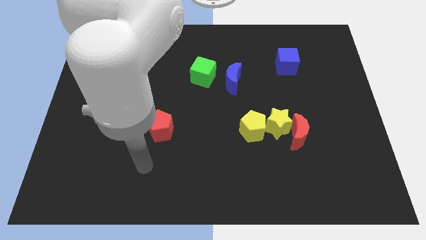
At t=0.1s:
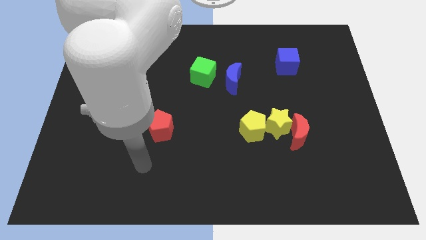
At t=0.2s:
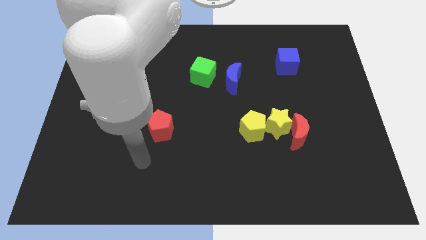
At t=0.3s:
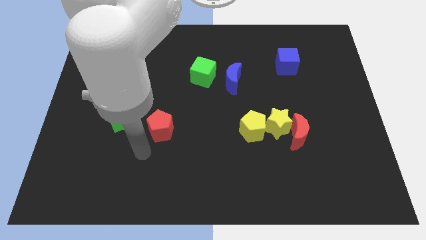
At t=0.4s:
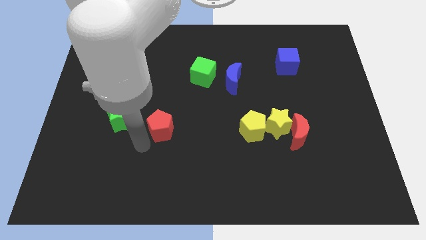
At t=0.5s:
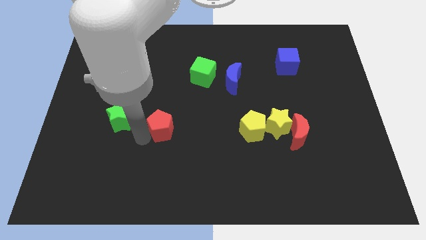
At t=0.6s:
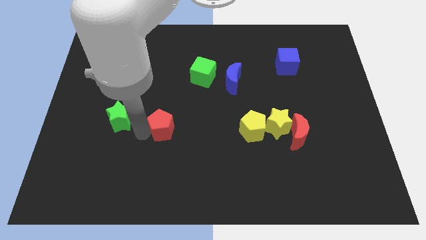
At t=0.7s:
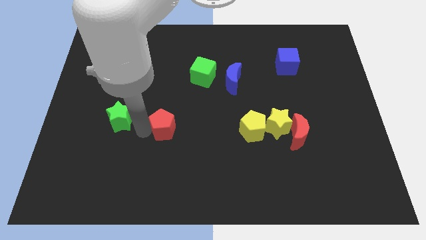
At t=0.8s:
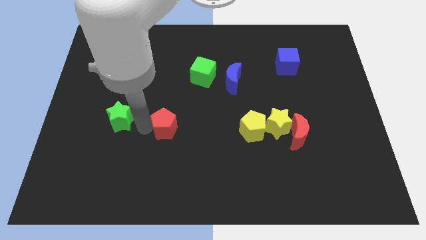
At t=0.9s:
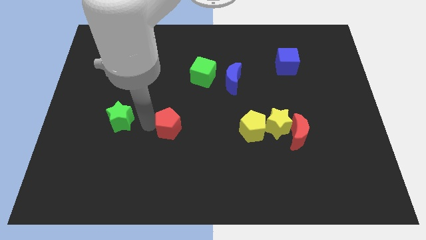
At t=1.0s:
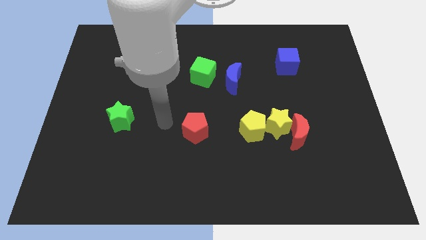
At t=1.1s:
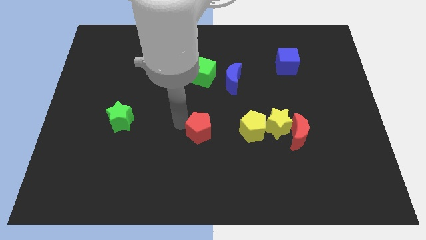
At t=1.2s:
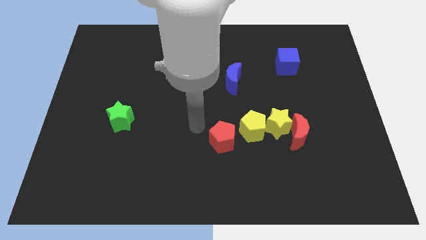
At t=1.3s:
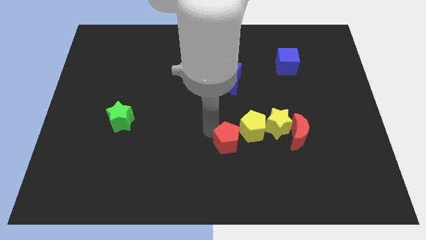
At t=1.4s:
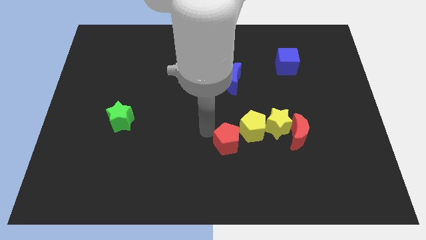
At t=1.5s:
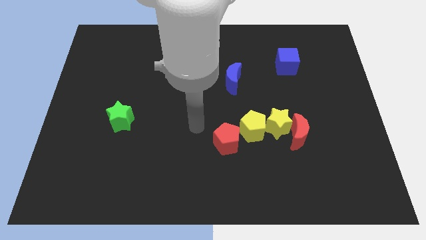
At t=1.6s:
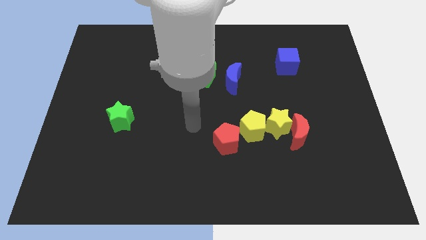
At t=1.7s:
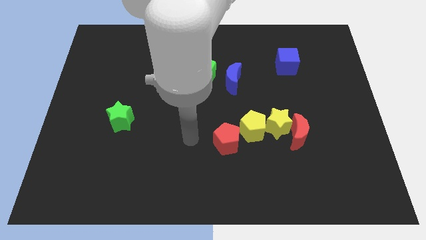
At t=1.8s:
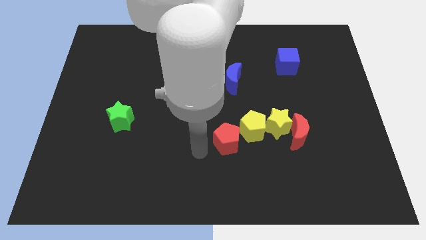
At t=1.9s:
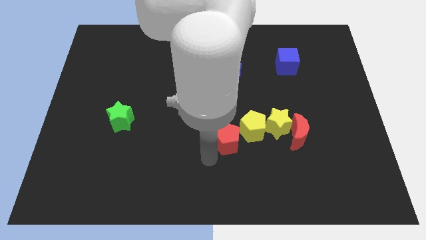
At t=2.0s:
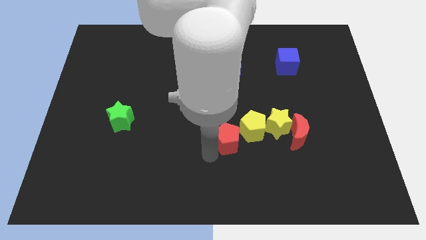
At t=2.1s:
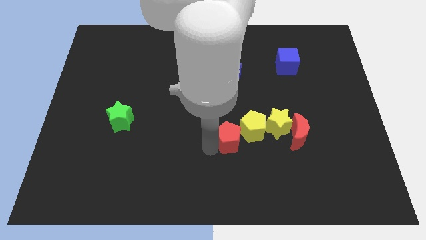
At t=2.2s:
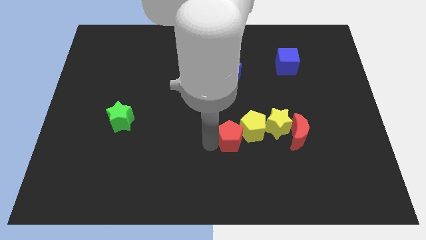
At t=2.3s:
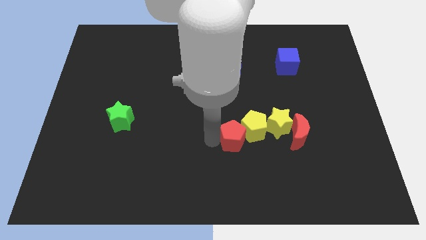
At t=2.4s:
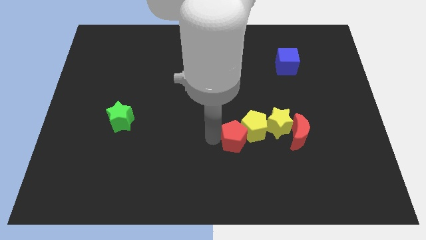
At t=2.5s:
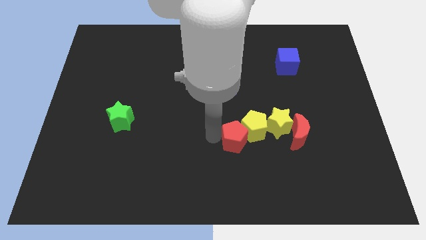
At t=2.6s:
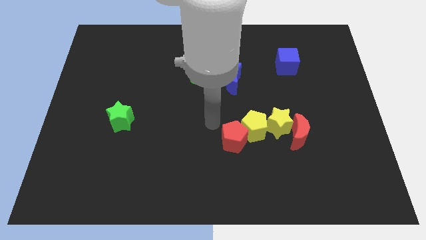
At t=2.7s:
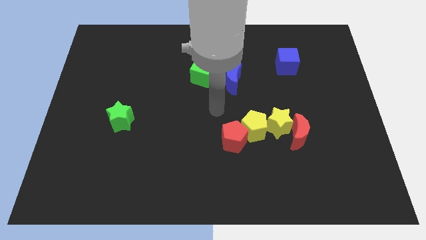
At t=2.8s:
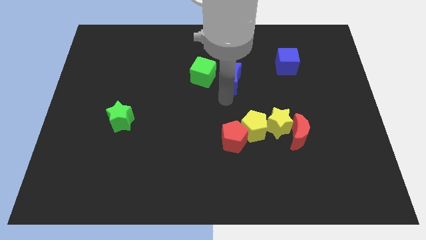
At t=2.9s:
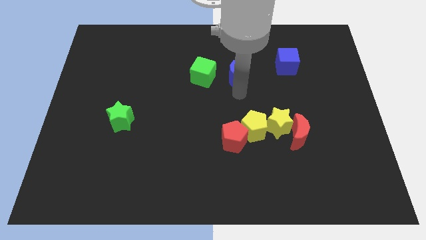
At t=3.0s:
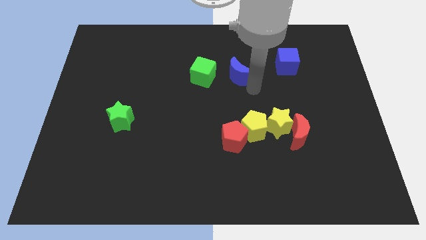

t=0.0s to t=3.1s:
push the red pentagon into the group of blocks

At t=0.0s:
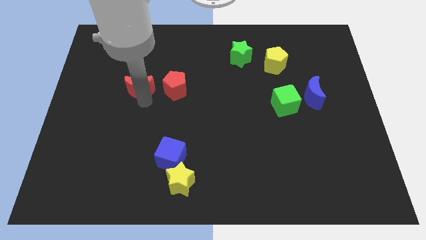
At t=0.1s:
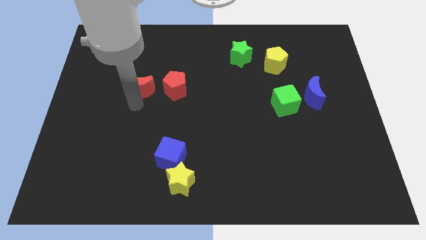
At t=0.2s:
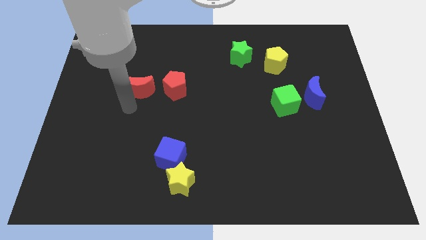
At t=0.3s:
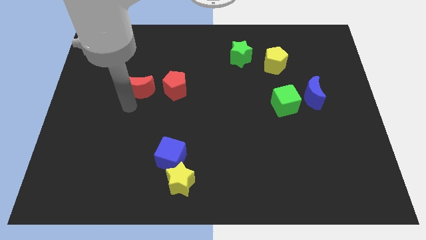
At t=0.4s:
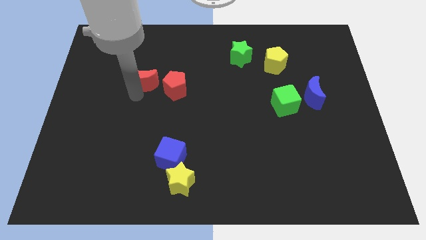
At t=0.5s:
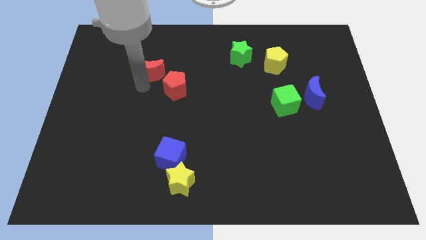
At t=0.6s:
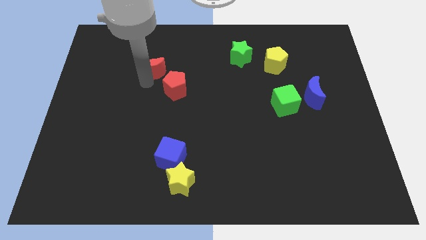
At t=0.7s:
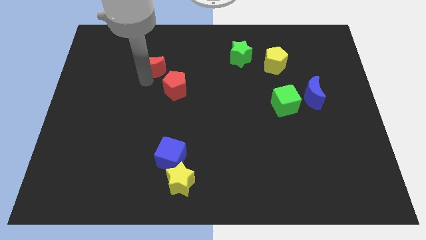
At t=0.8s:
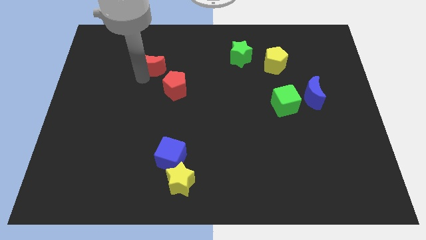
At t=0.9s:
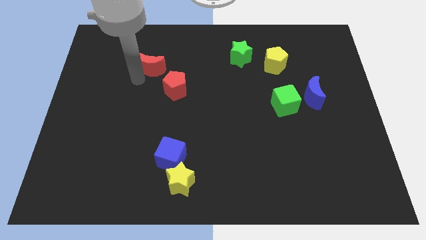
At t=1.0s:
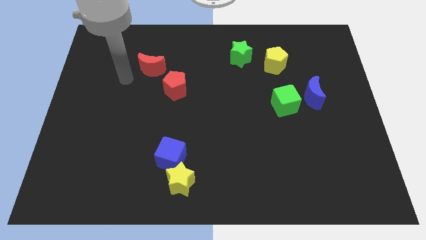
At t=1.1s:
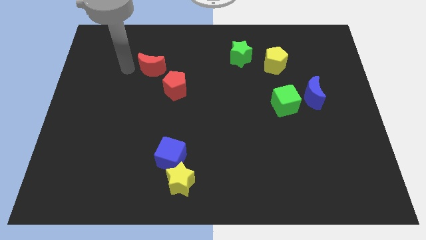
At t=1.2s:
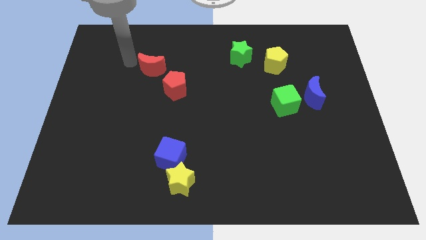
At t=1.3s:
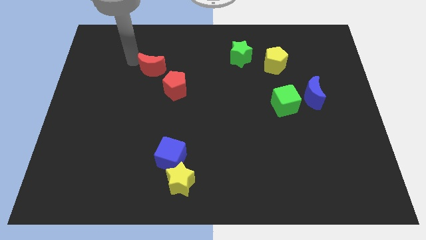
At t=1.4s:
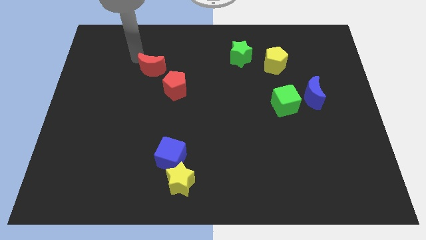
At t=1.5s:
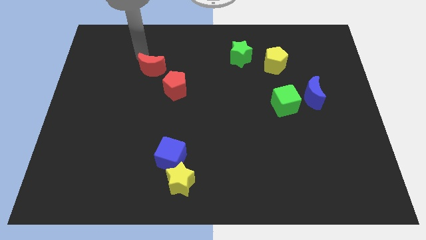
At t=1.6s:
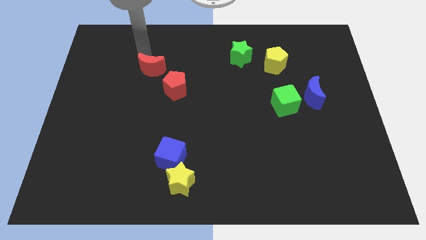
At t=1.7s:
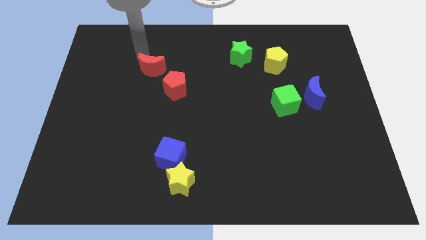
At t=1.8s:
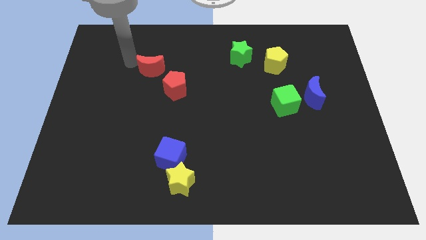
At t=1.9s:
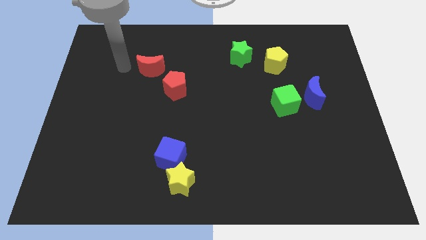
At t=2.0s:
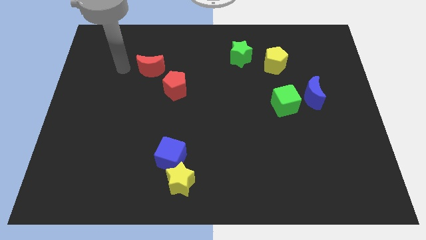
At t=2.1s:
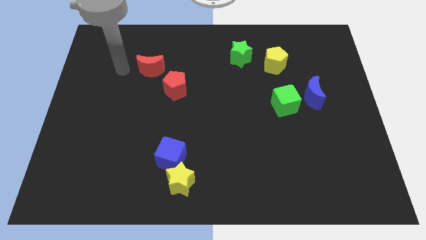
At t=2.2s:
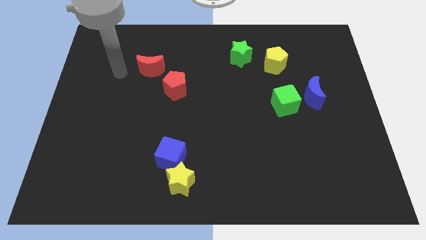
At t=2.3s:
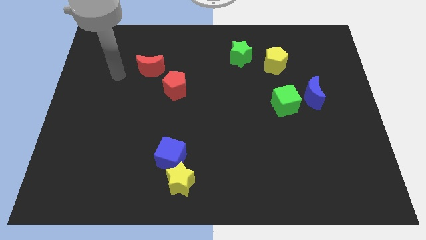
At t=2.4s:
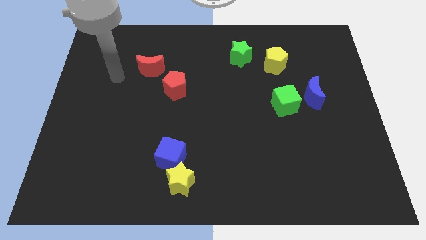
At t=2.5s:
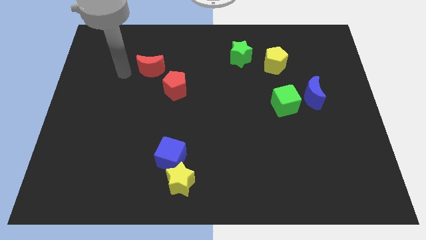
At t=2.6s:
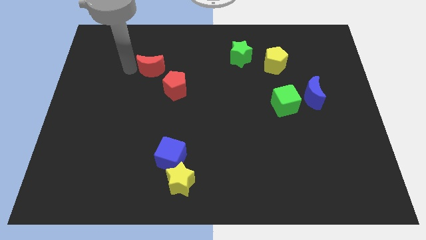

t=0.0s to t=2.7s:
push the red moon diagonally top left of the red pentagon

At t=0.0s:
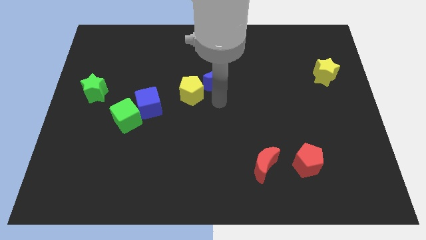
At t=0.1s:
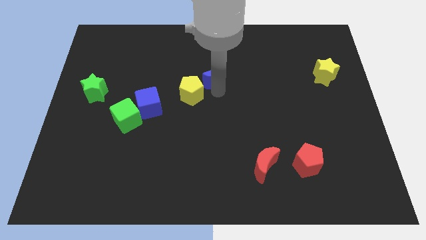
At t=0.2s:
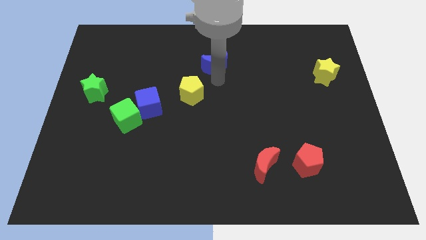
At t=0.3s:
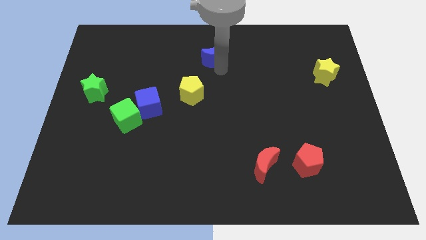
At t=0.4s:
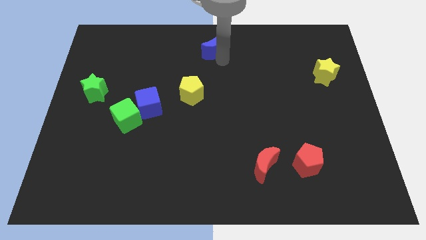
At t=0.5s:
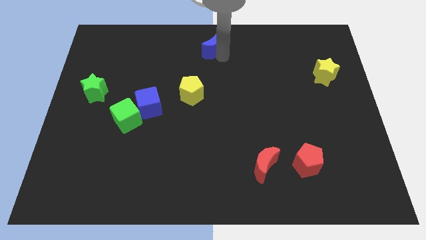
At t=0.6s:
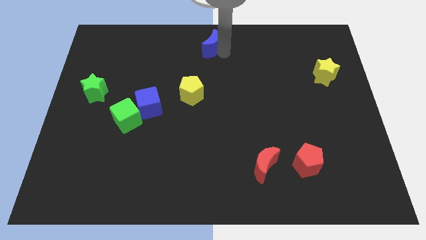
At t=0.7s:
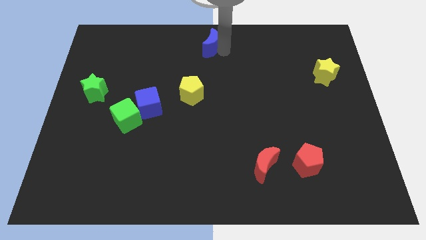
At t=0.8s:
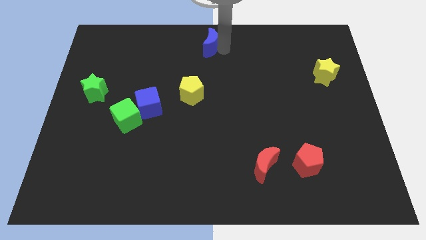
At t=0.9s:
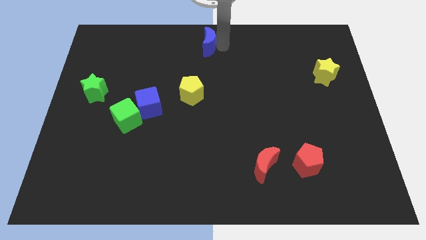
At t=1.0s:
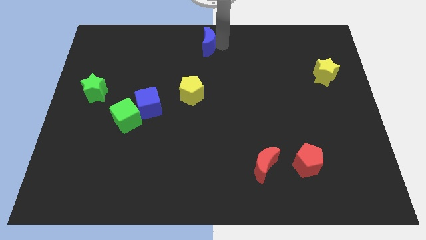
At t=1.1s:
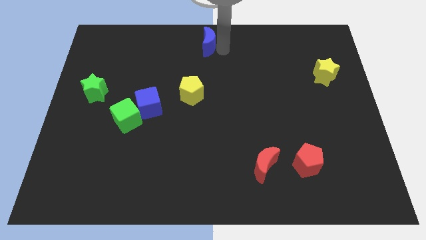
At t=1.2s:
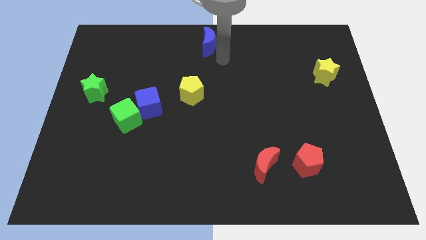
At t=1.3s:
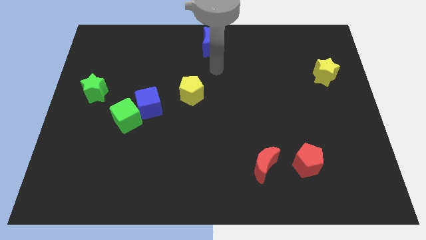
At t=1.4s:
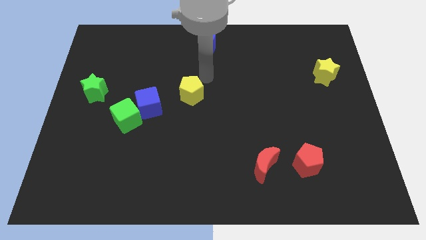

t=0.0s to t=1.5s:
drag blue moon slightly towards the top

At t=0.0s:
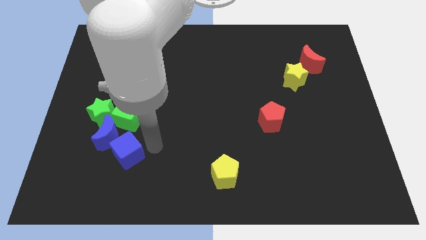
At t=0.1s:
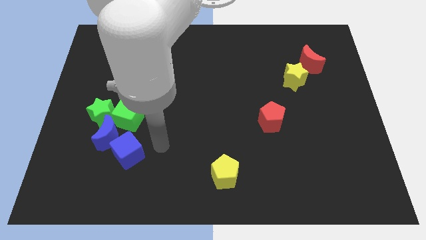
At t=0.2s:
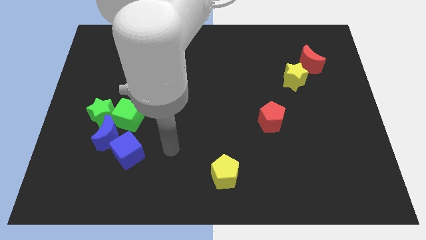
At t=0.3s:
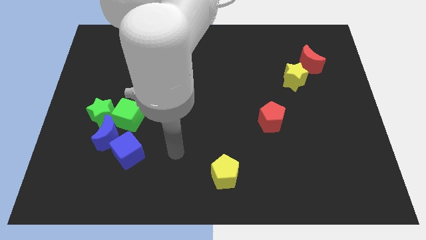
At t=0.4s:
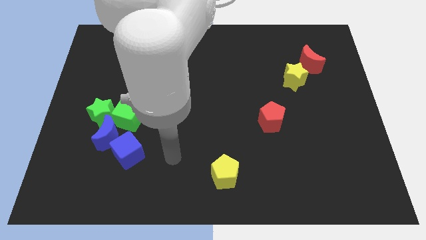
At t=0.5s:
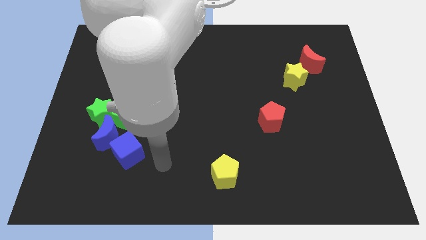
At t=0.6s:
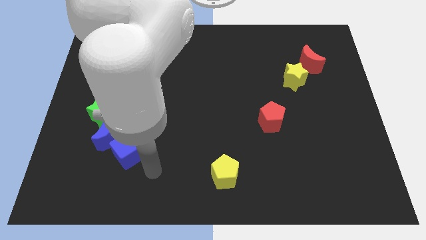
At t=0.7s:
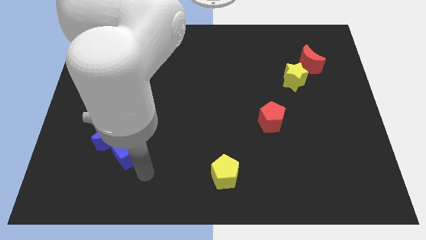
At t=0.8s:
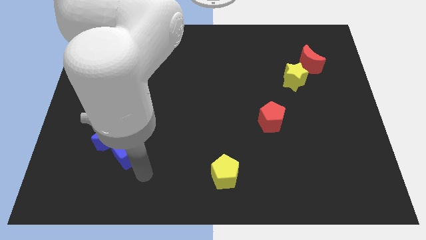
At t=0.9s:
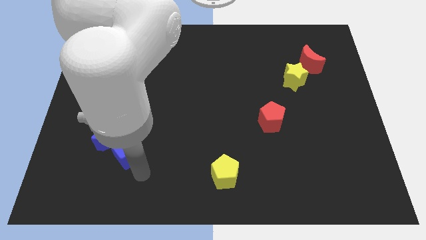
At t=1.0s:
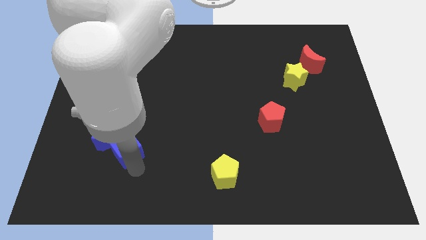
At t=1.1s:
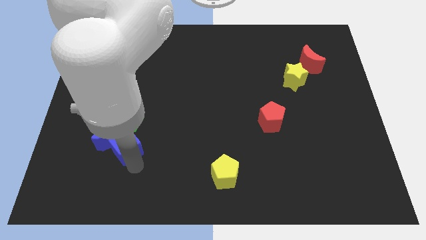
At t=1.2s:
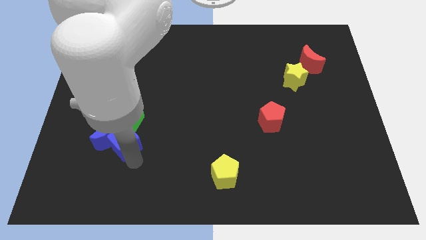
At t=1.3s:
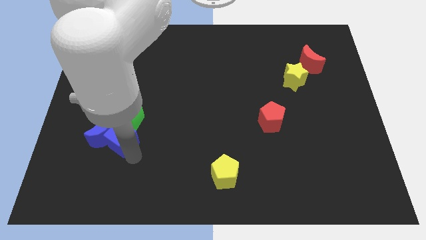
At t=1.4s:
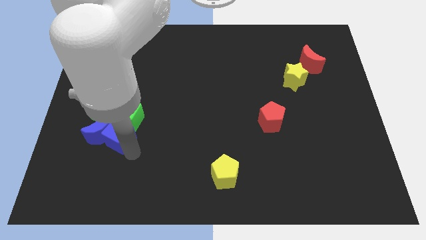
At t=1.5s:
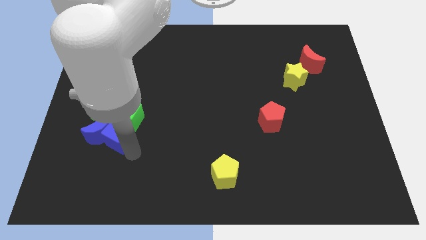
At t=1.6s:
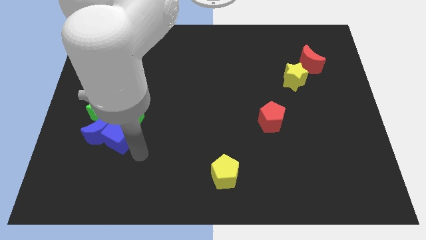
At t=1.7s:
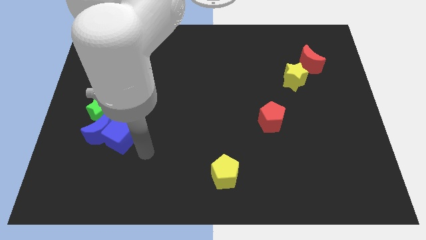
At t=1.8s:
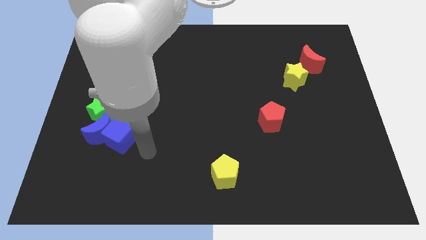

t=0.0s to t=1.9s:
push the blue cube into the blue moon
